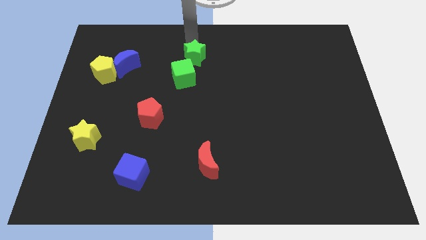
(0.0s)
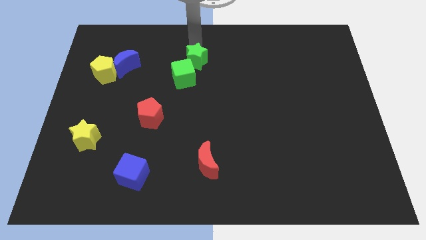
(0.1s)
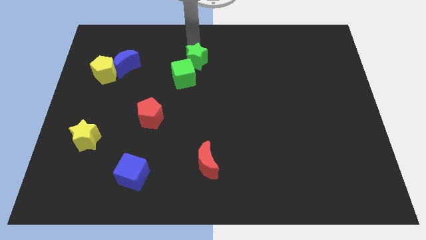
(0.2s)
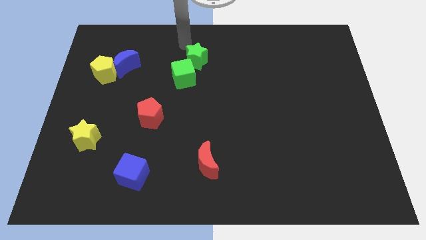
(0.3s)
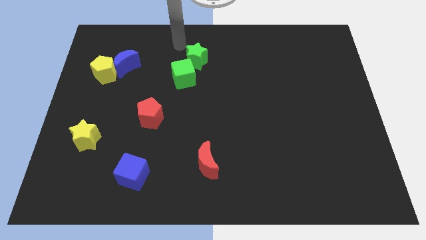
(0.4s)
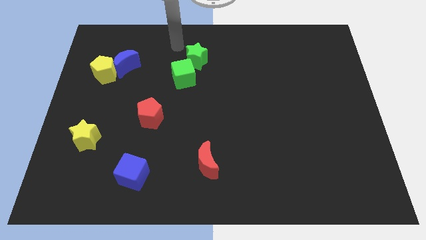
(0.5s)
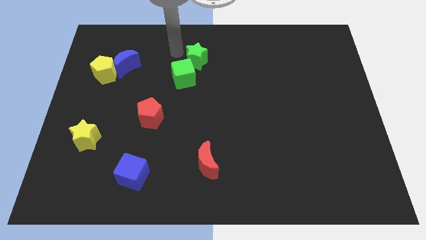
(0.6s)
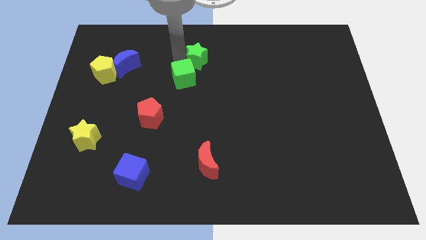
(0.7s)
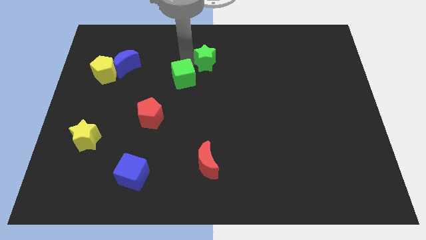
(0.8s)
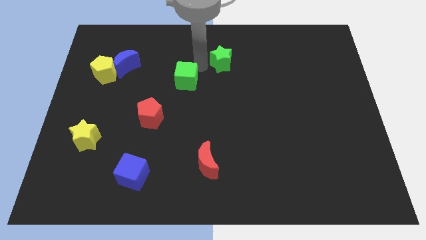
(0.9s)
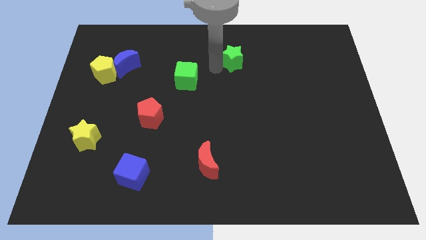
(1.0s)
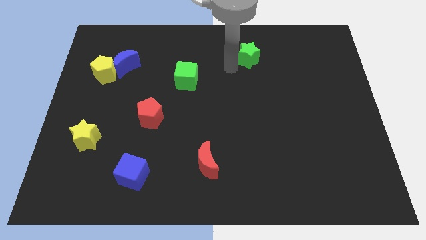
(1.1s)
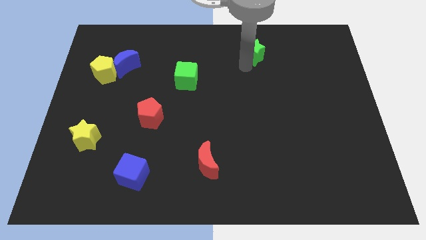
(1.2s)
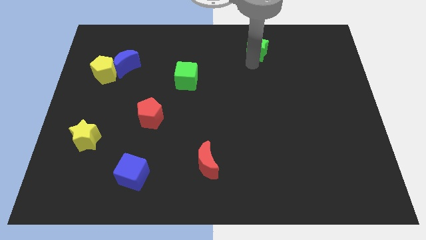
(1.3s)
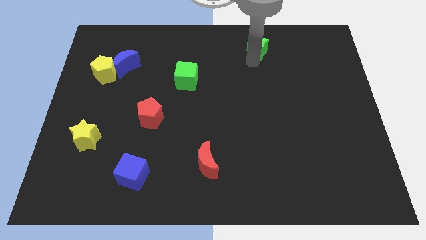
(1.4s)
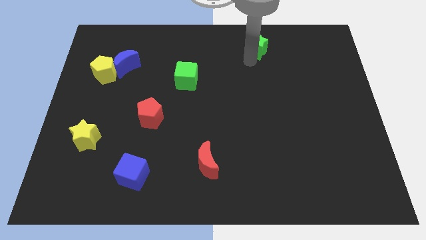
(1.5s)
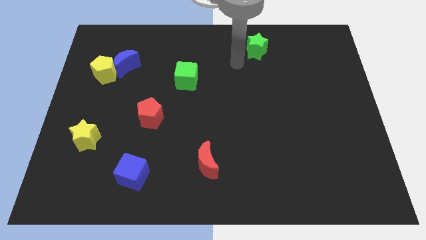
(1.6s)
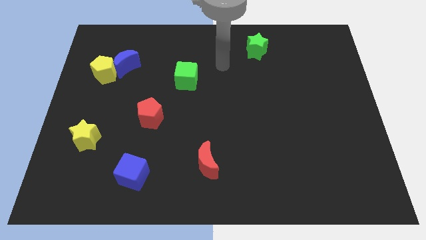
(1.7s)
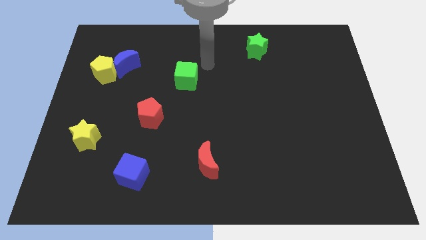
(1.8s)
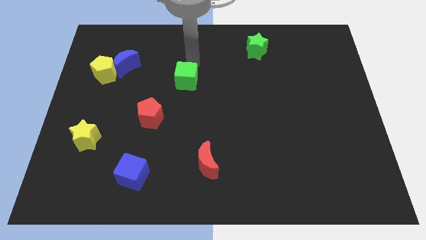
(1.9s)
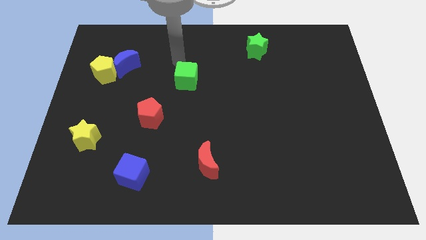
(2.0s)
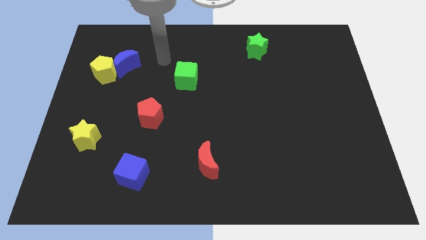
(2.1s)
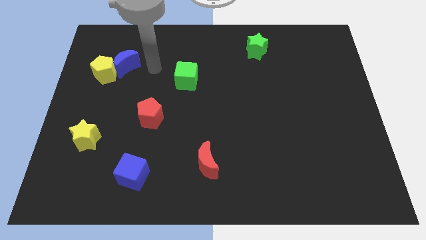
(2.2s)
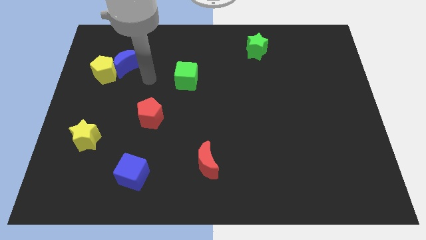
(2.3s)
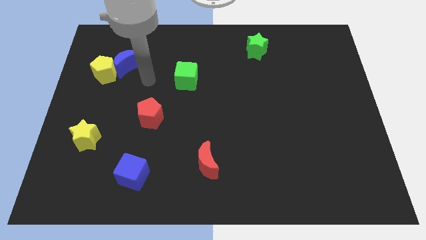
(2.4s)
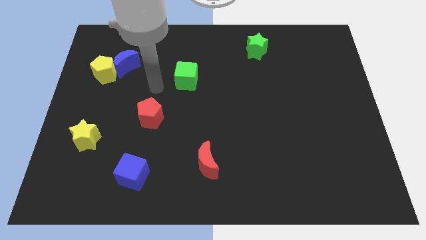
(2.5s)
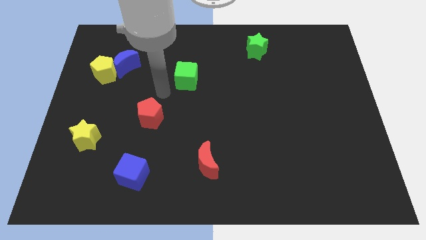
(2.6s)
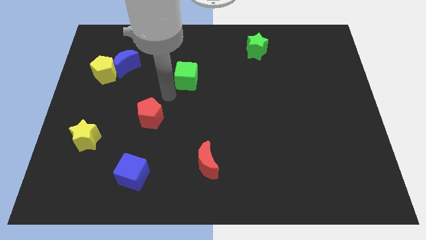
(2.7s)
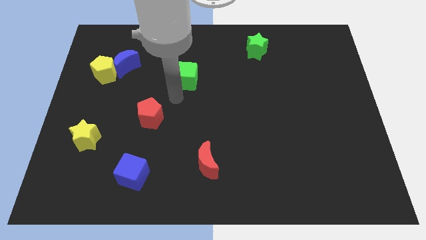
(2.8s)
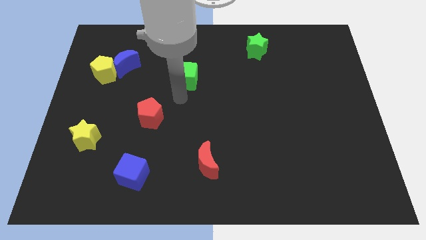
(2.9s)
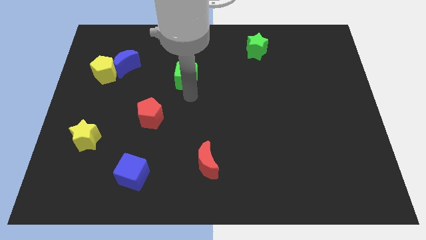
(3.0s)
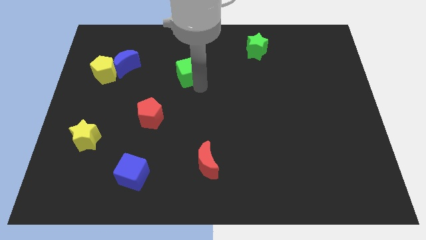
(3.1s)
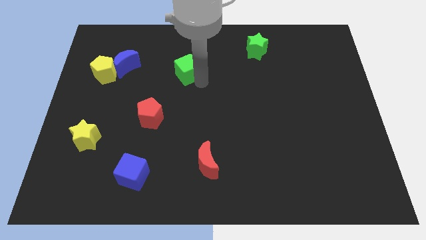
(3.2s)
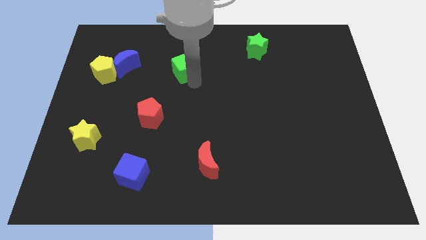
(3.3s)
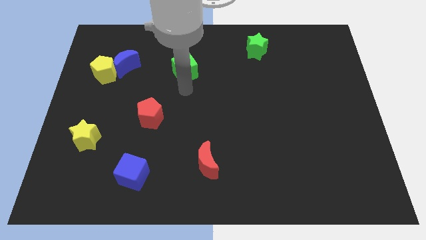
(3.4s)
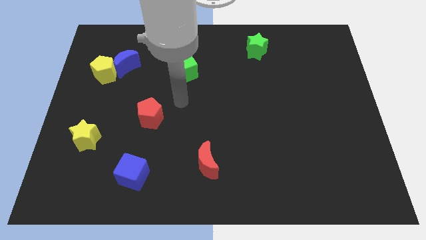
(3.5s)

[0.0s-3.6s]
slide the green star to the right side of the board

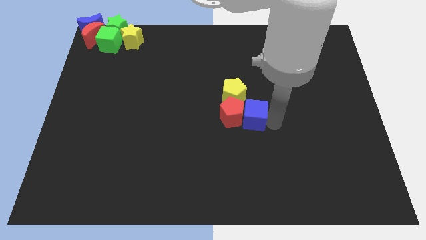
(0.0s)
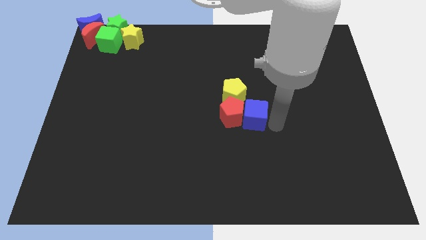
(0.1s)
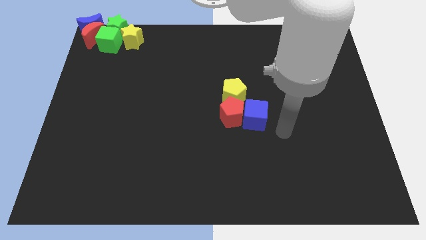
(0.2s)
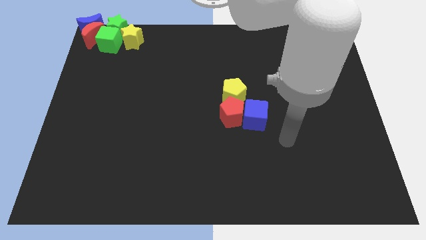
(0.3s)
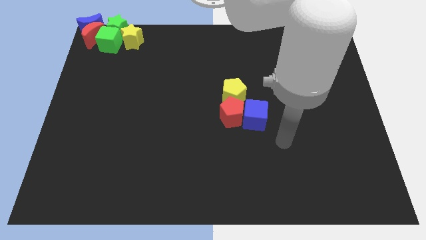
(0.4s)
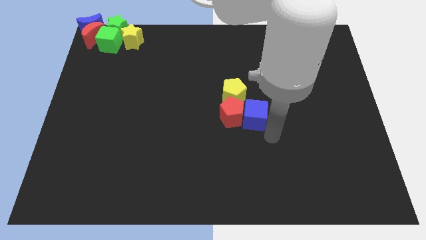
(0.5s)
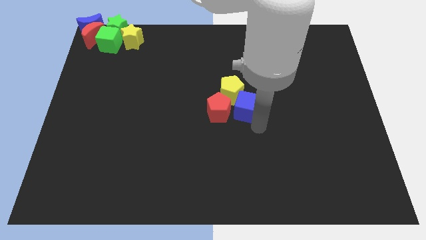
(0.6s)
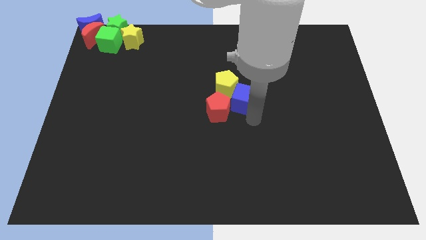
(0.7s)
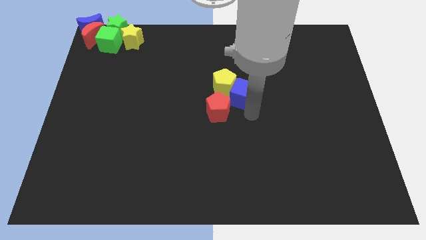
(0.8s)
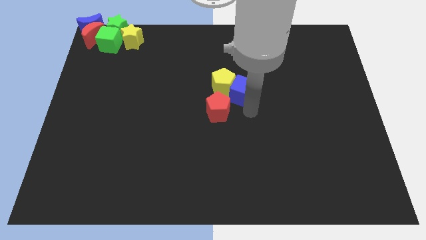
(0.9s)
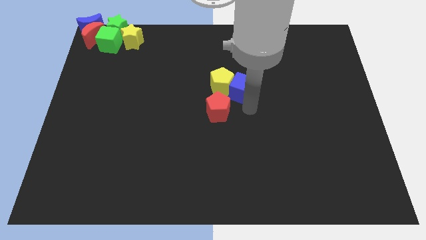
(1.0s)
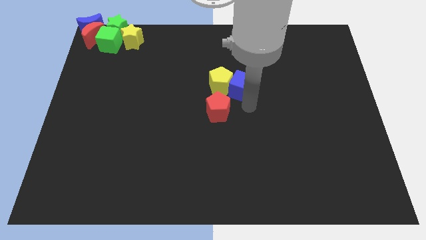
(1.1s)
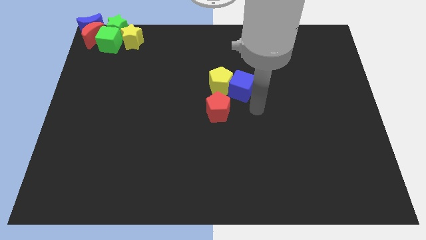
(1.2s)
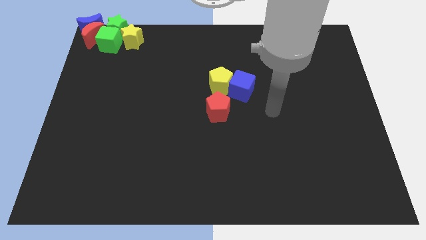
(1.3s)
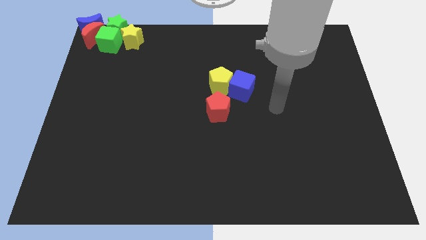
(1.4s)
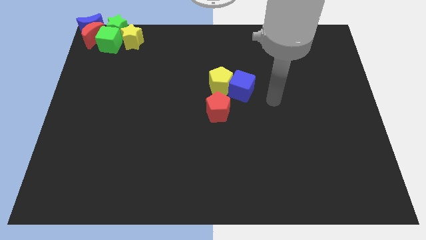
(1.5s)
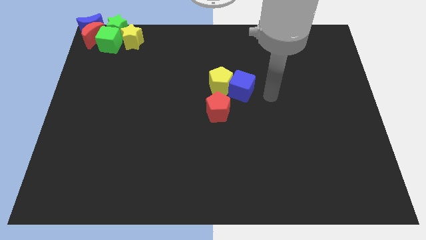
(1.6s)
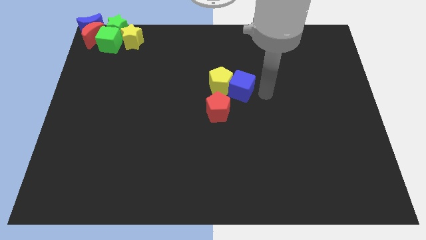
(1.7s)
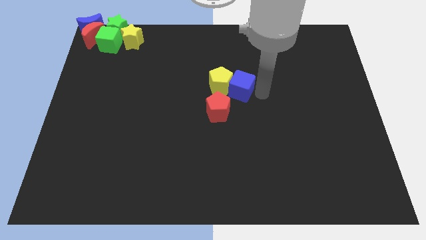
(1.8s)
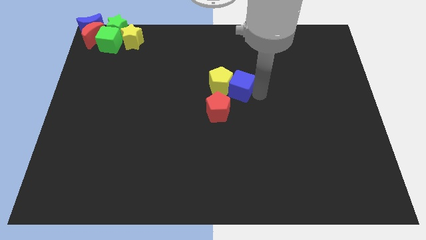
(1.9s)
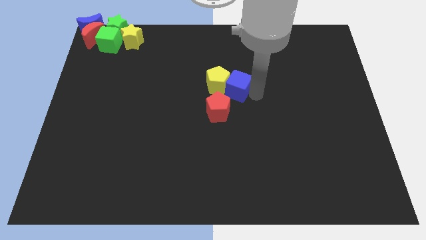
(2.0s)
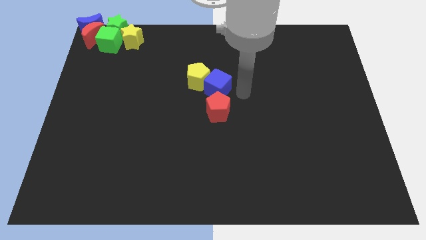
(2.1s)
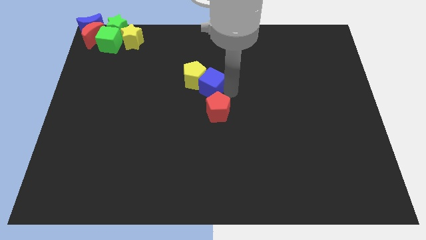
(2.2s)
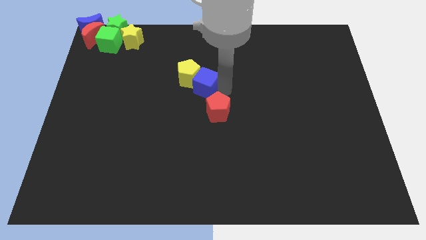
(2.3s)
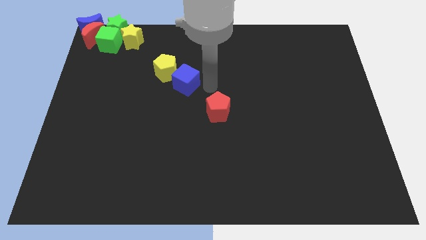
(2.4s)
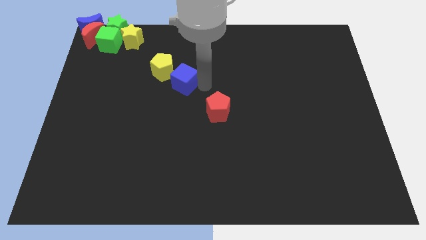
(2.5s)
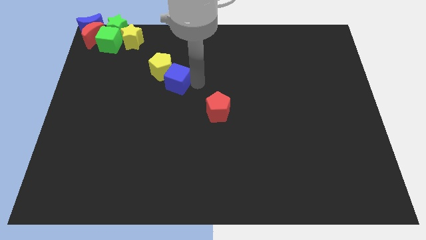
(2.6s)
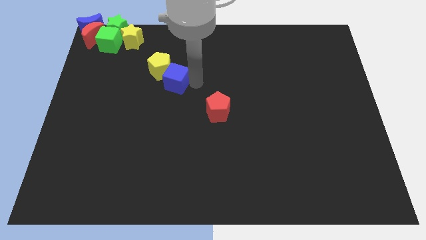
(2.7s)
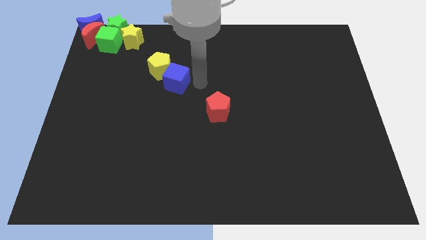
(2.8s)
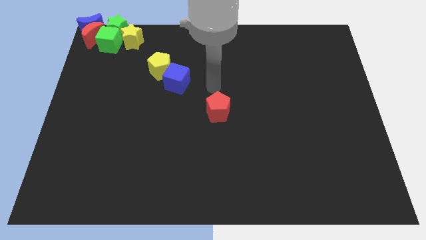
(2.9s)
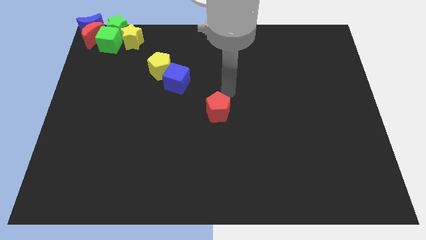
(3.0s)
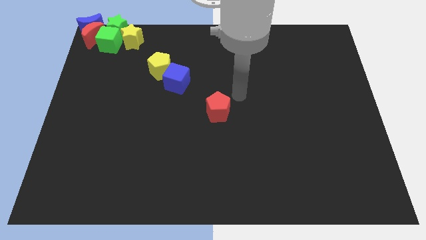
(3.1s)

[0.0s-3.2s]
move the yellow pentagon and blue cube away from the red pentagon

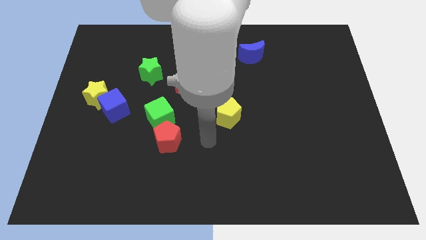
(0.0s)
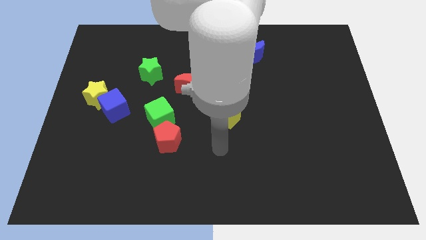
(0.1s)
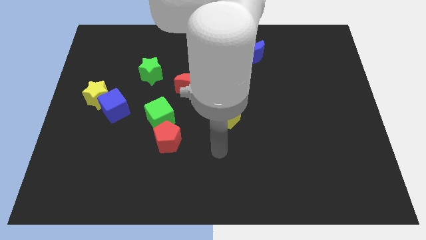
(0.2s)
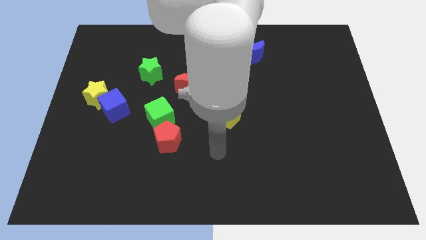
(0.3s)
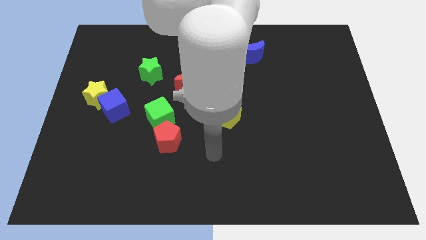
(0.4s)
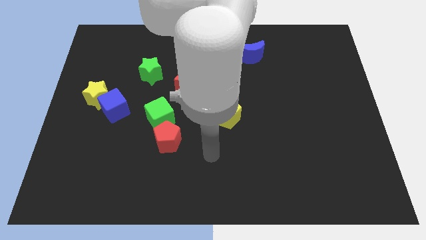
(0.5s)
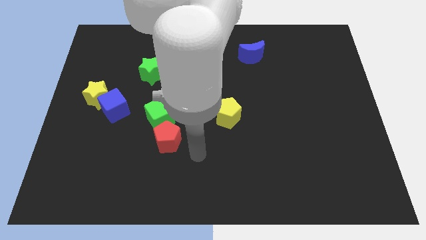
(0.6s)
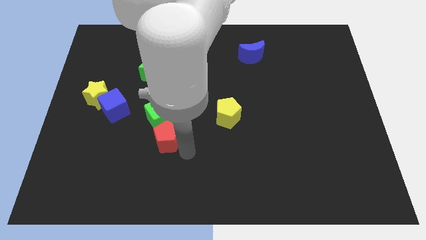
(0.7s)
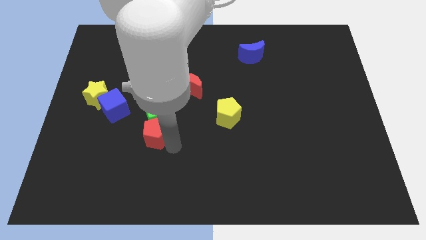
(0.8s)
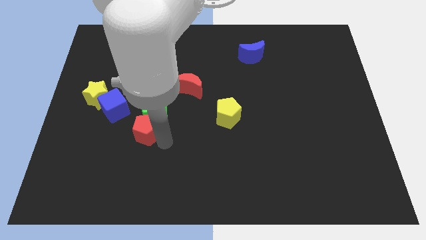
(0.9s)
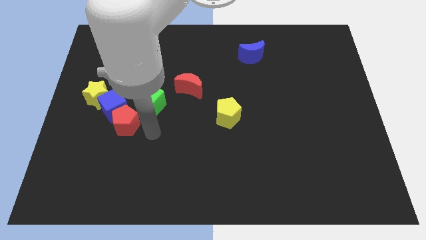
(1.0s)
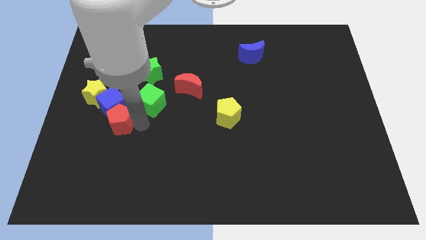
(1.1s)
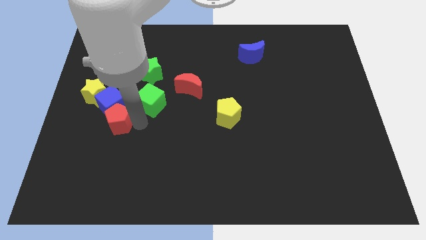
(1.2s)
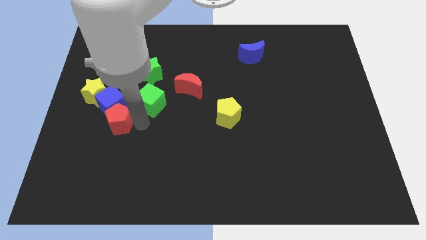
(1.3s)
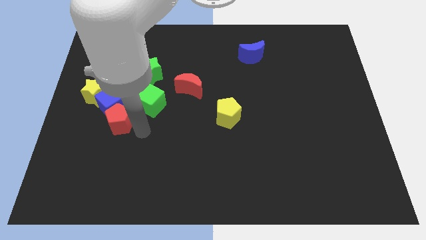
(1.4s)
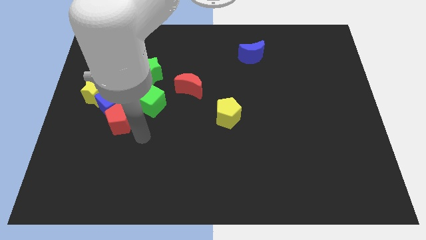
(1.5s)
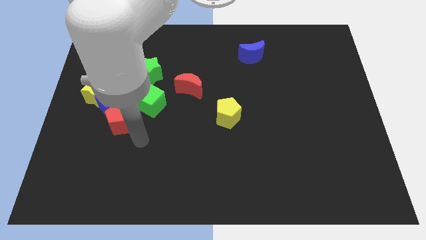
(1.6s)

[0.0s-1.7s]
move the red pentagon into the blue cube

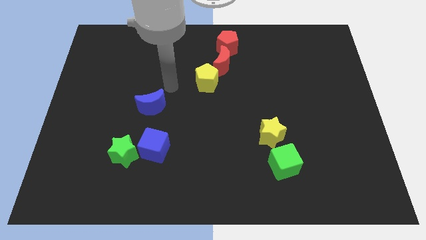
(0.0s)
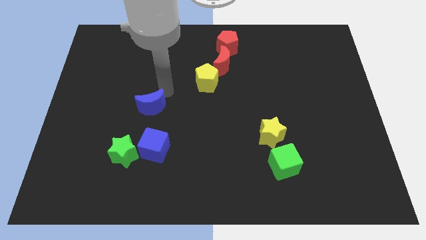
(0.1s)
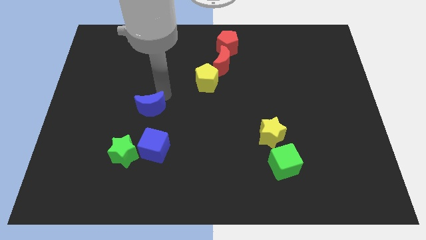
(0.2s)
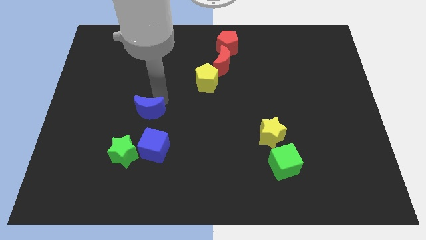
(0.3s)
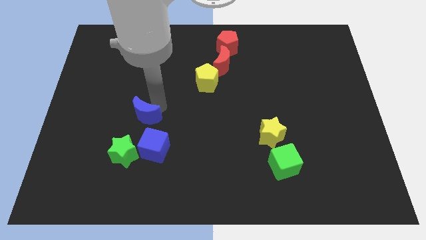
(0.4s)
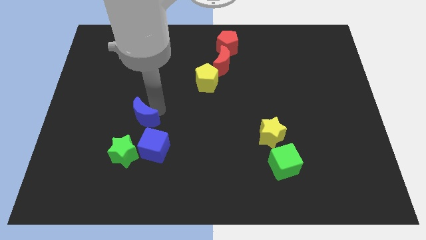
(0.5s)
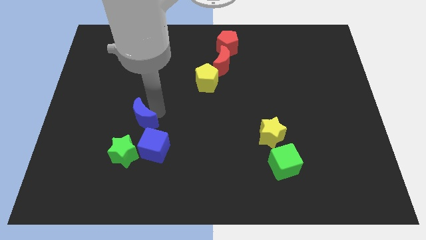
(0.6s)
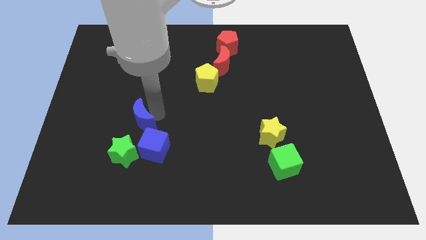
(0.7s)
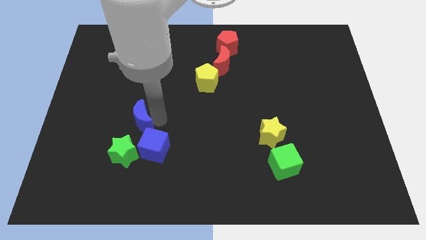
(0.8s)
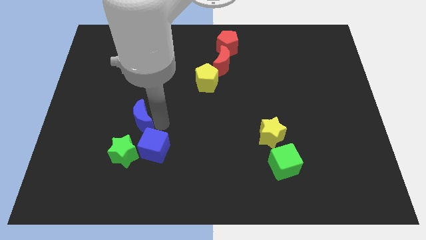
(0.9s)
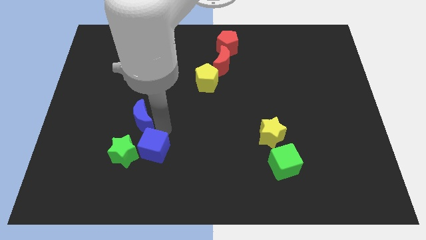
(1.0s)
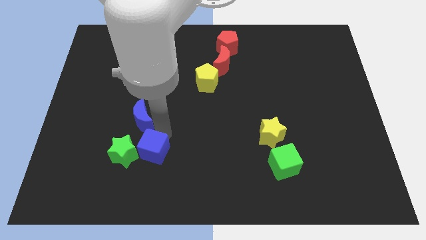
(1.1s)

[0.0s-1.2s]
slide blue crescent into the blue cube
